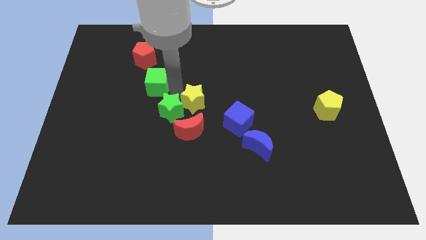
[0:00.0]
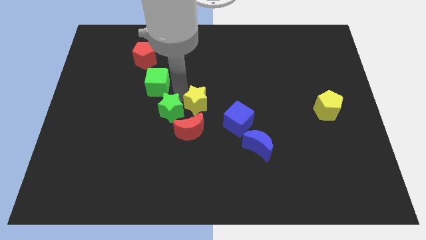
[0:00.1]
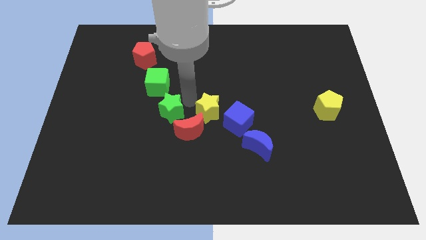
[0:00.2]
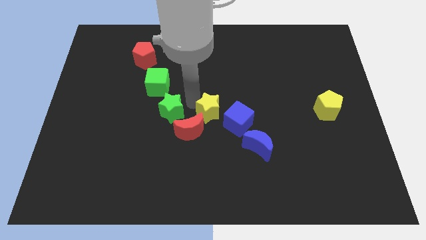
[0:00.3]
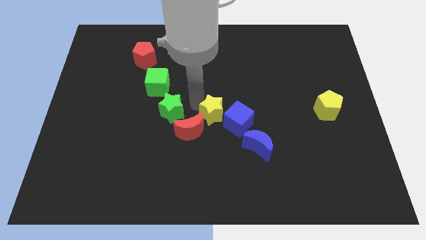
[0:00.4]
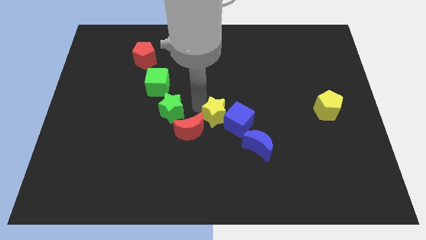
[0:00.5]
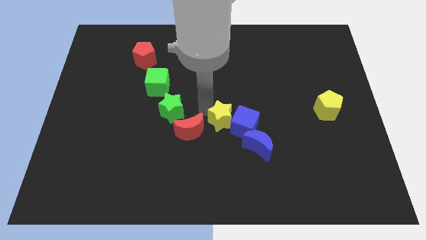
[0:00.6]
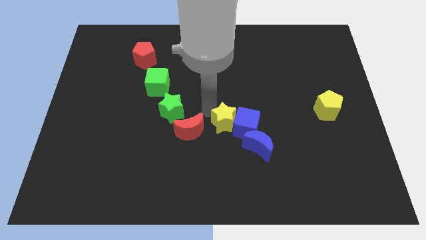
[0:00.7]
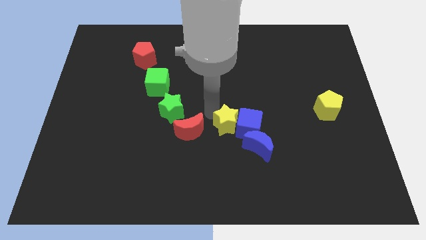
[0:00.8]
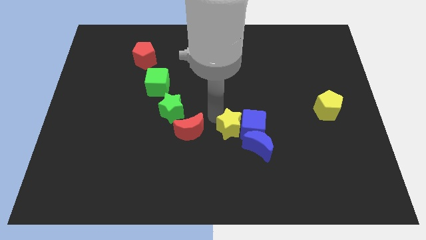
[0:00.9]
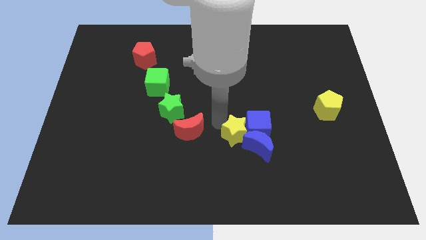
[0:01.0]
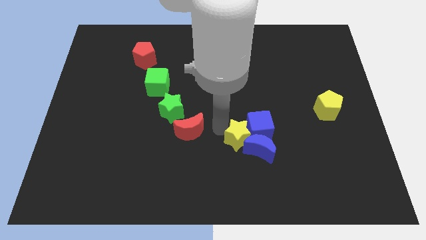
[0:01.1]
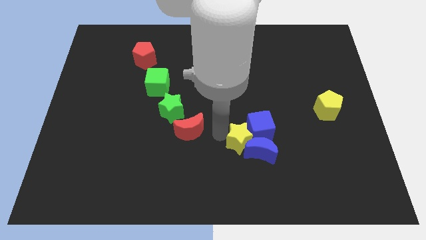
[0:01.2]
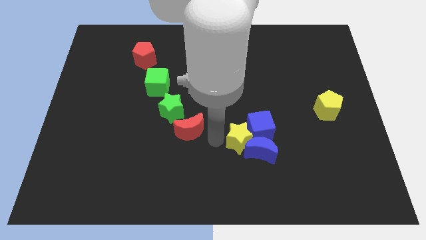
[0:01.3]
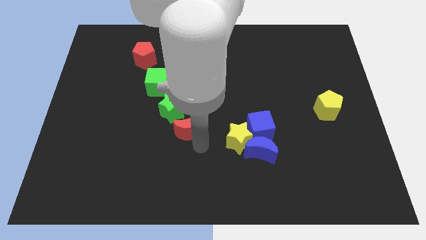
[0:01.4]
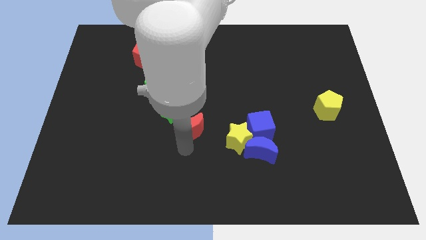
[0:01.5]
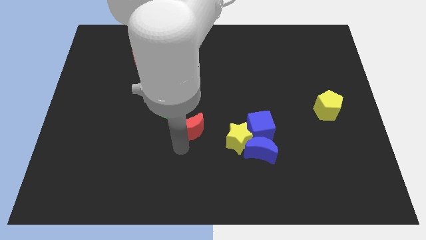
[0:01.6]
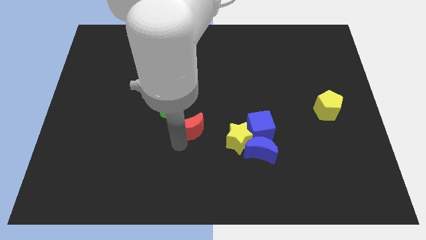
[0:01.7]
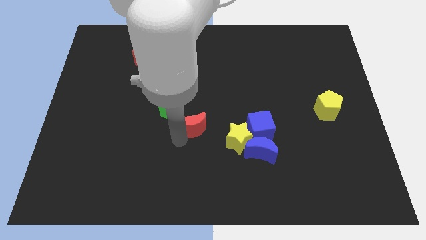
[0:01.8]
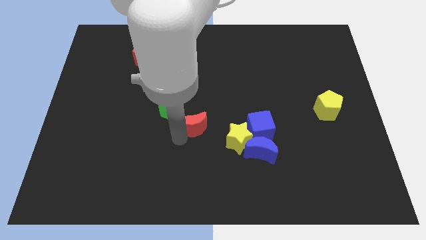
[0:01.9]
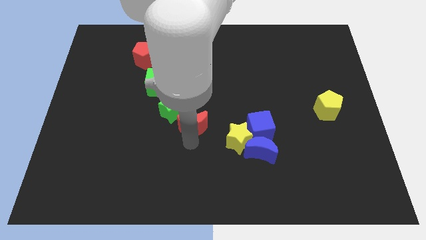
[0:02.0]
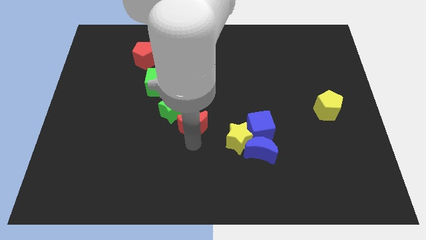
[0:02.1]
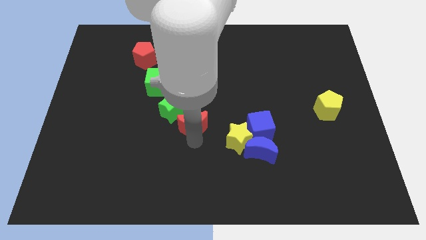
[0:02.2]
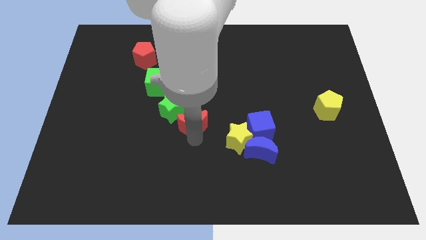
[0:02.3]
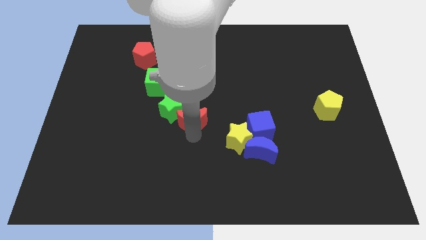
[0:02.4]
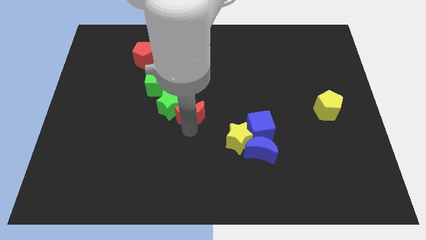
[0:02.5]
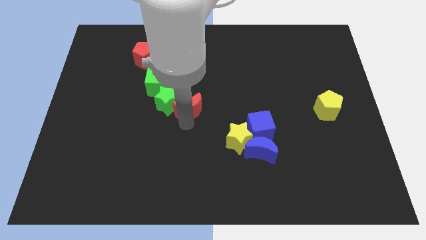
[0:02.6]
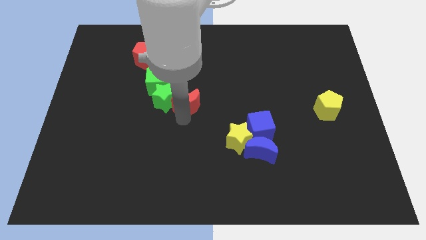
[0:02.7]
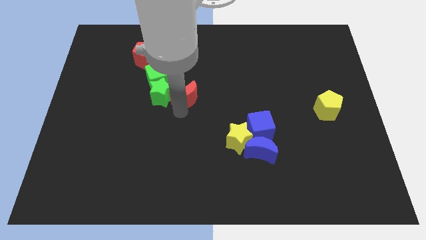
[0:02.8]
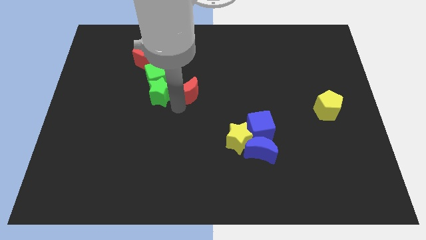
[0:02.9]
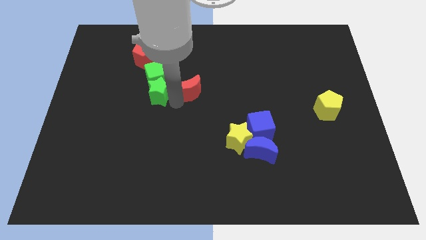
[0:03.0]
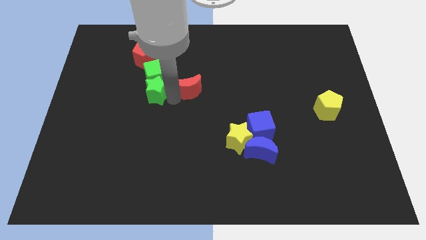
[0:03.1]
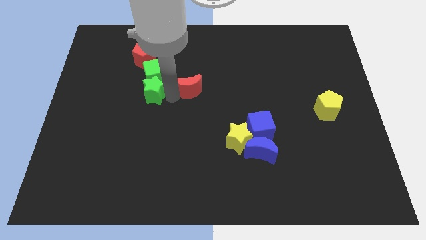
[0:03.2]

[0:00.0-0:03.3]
move the red crescent to the green blocks

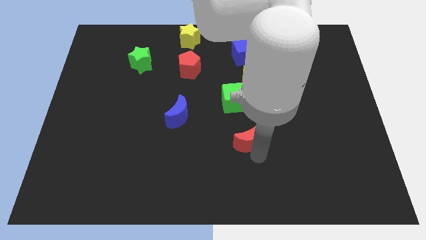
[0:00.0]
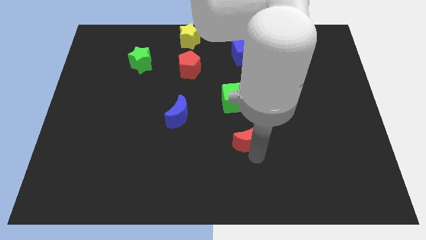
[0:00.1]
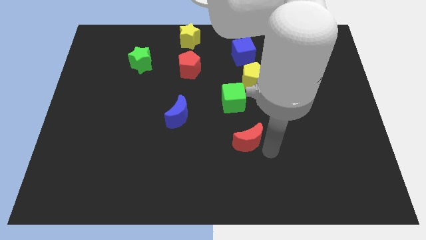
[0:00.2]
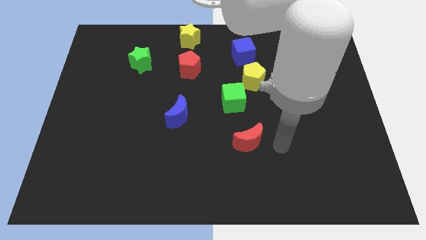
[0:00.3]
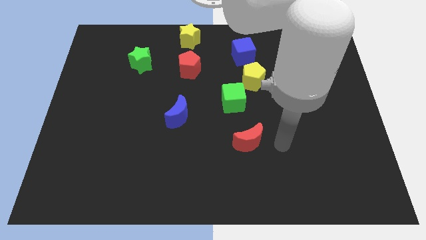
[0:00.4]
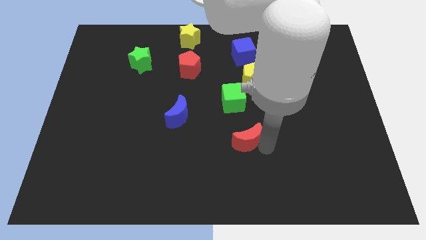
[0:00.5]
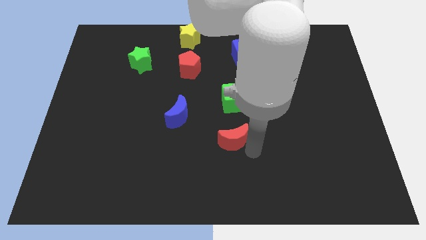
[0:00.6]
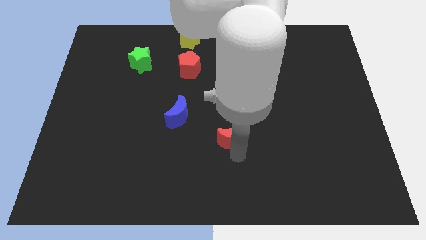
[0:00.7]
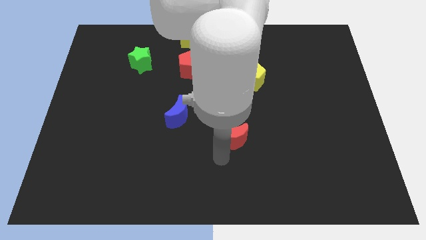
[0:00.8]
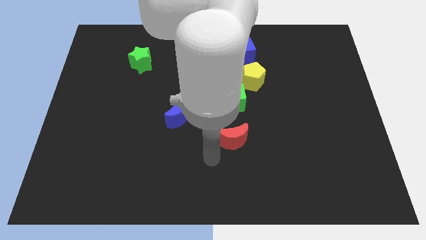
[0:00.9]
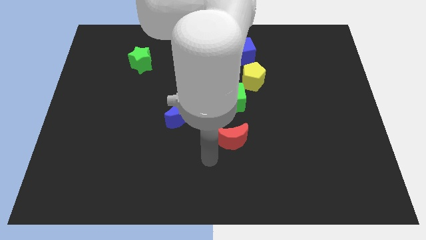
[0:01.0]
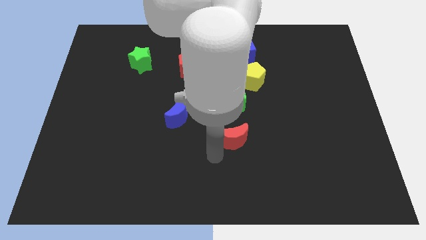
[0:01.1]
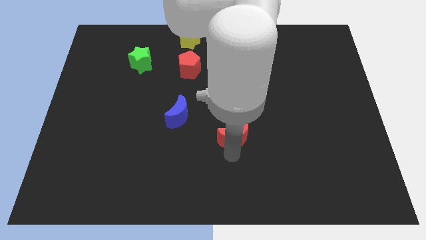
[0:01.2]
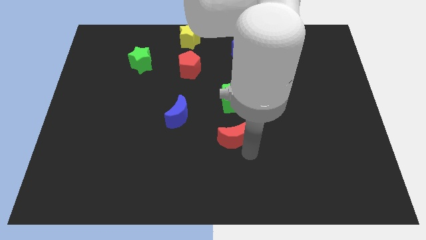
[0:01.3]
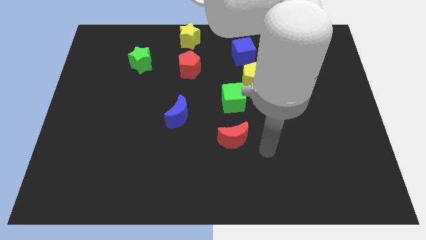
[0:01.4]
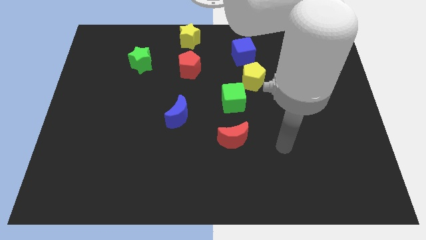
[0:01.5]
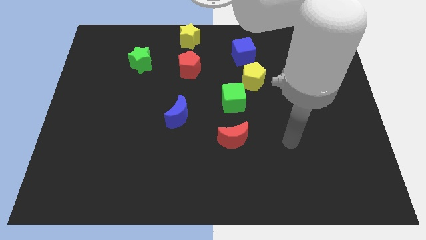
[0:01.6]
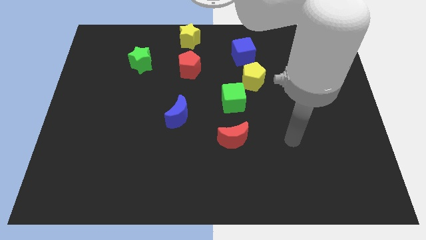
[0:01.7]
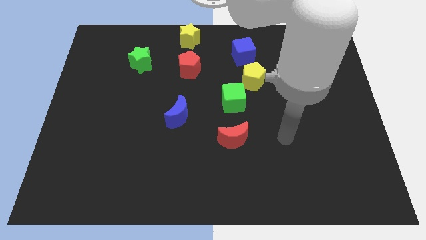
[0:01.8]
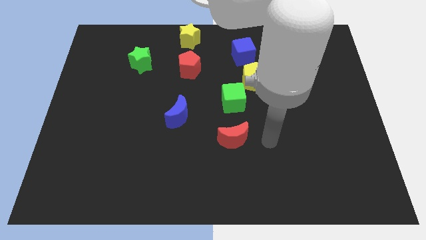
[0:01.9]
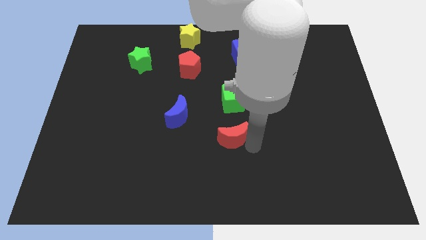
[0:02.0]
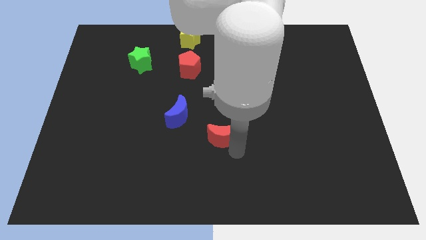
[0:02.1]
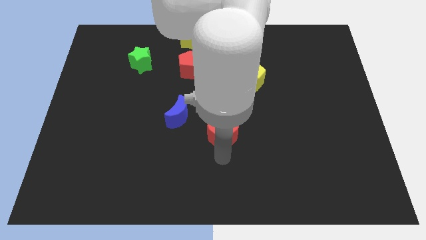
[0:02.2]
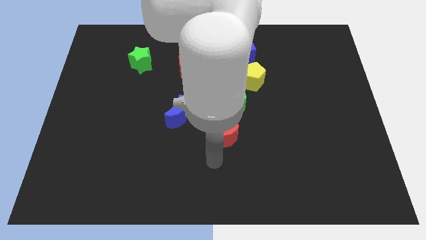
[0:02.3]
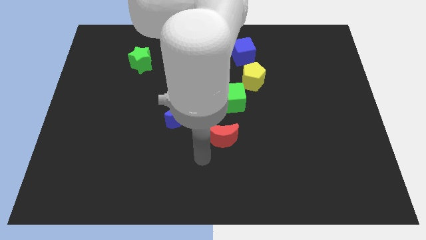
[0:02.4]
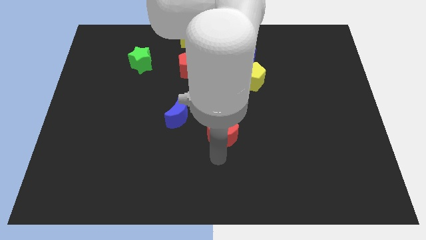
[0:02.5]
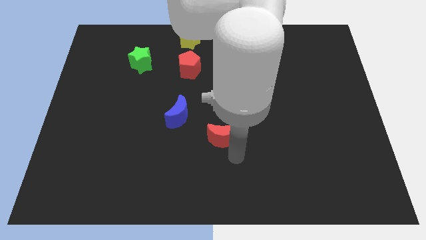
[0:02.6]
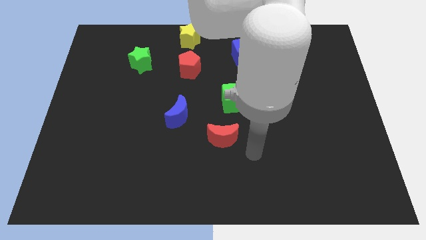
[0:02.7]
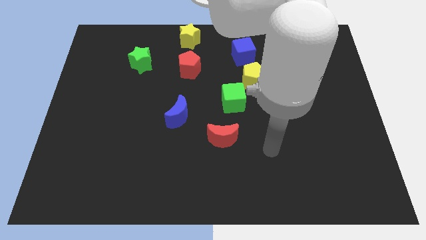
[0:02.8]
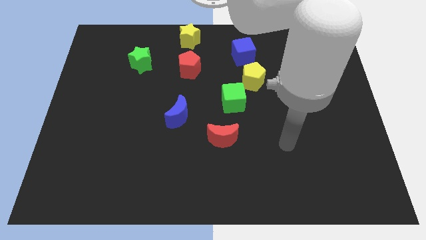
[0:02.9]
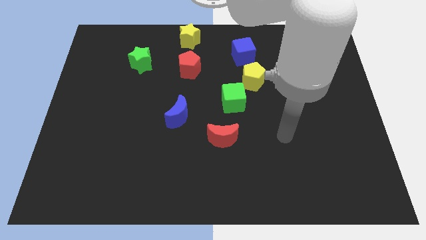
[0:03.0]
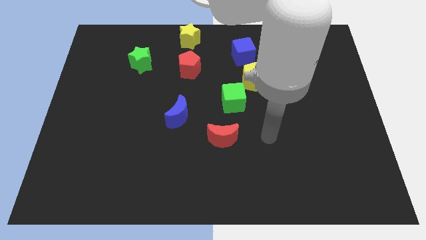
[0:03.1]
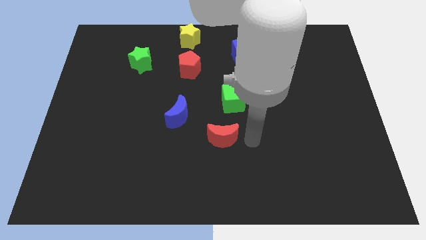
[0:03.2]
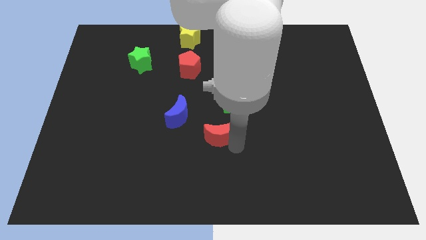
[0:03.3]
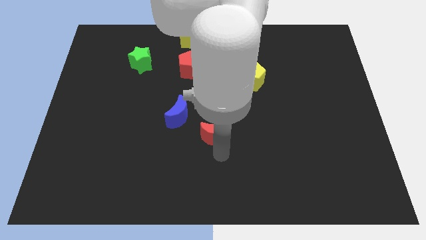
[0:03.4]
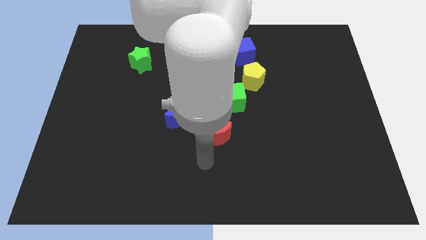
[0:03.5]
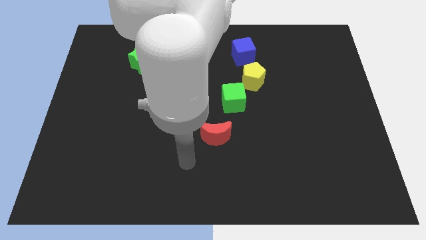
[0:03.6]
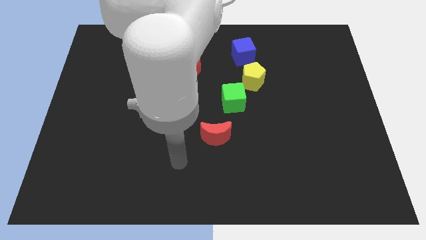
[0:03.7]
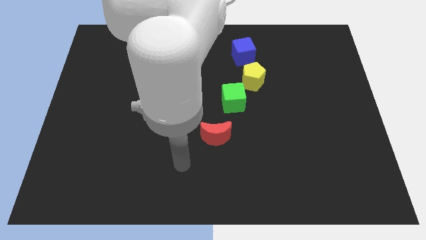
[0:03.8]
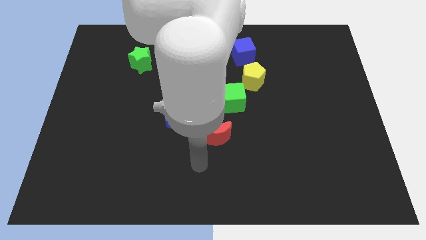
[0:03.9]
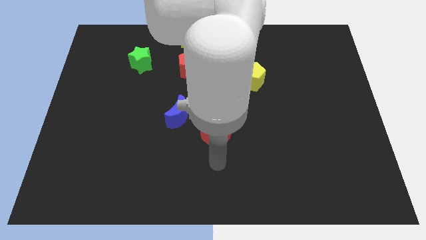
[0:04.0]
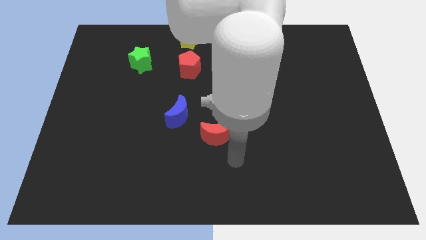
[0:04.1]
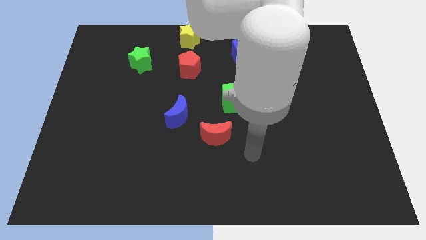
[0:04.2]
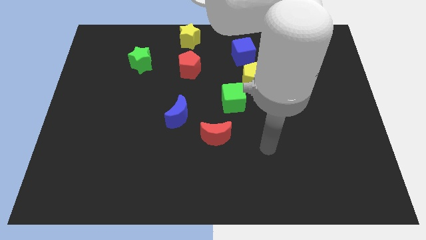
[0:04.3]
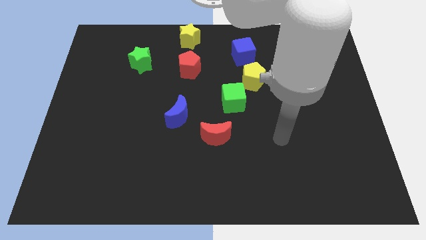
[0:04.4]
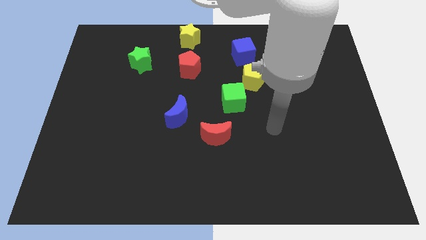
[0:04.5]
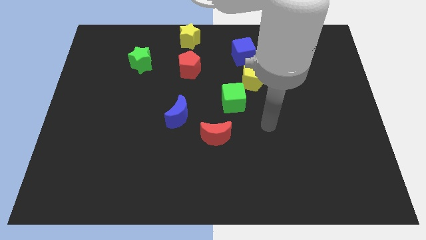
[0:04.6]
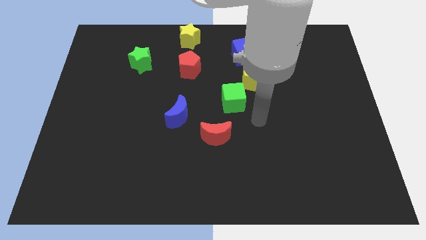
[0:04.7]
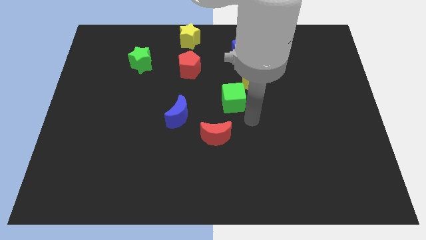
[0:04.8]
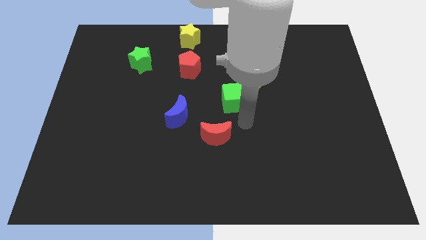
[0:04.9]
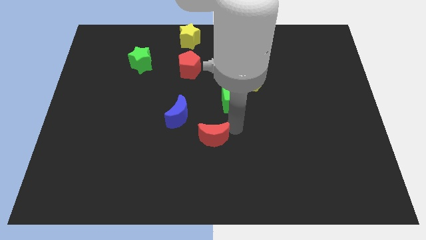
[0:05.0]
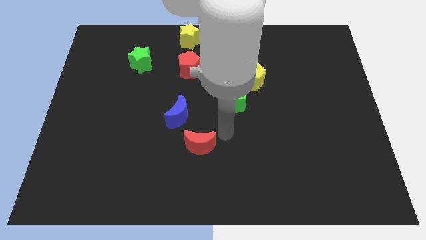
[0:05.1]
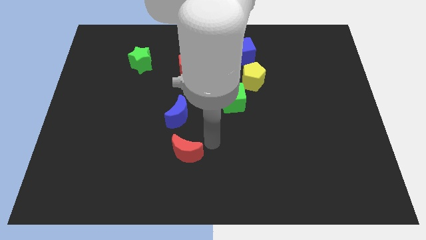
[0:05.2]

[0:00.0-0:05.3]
place the red crescent below the blue crescent

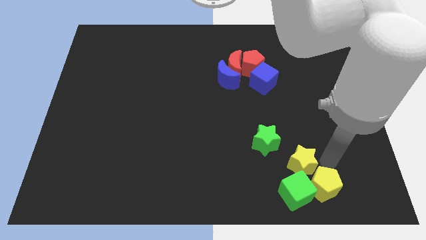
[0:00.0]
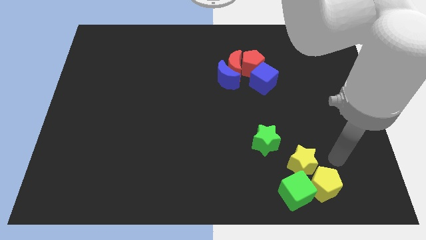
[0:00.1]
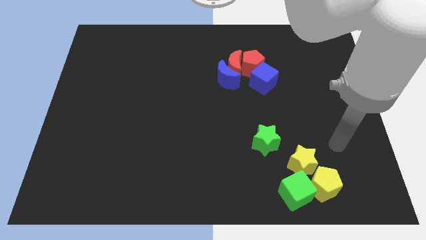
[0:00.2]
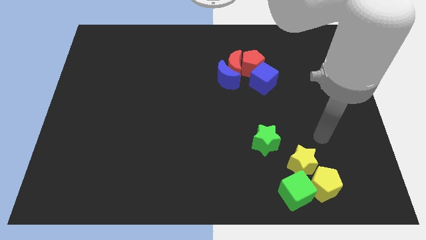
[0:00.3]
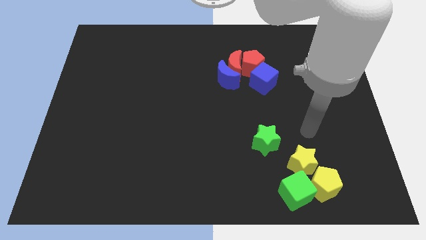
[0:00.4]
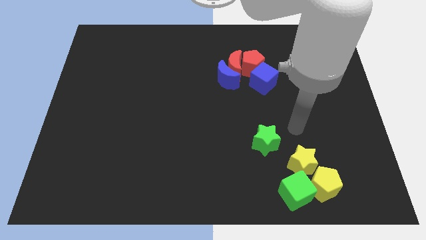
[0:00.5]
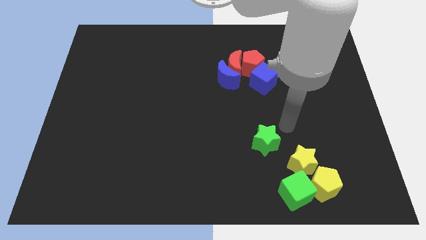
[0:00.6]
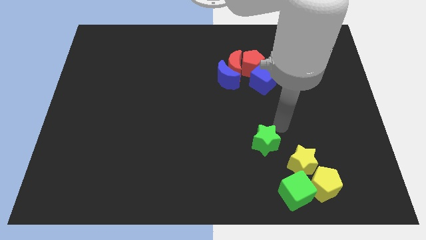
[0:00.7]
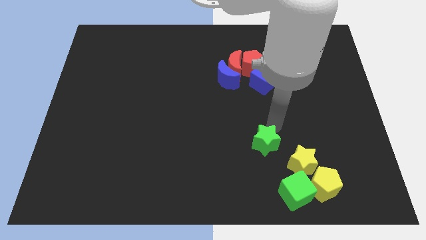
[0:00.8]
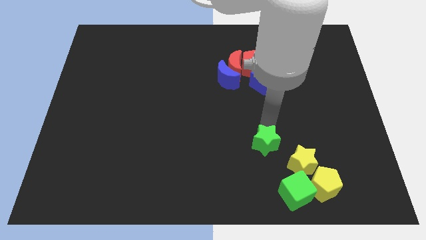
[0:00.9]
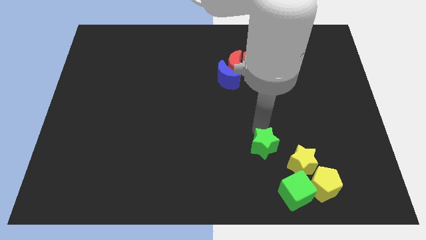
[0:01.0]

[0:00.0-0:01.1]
tap the green star
